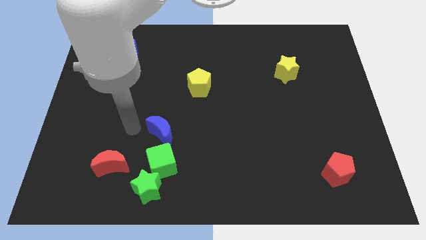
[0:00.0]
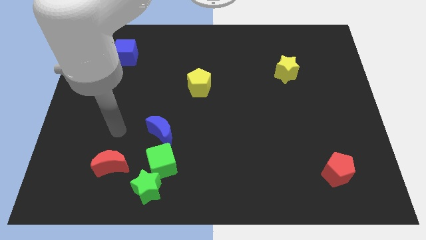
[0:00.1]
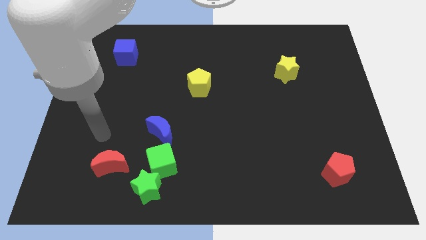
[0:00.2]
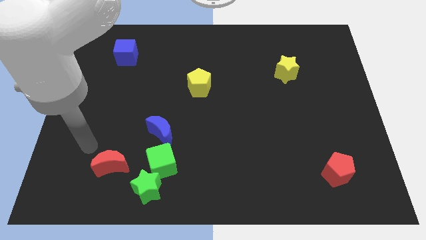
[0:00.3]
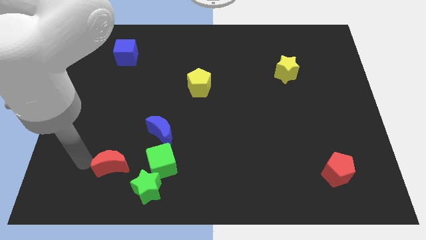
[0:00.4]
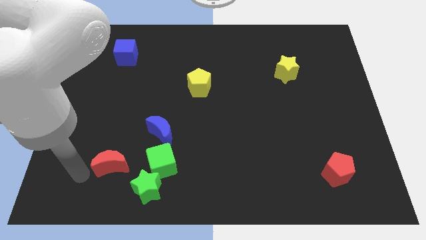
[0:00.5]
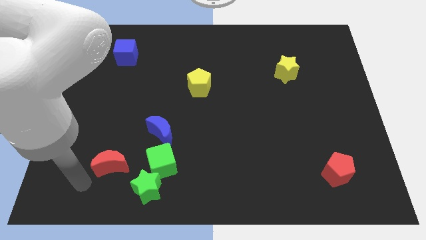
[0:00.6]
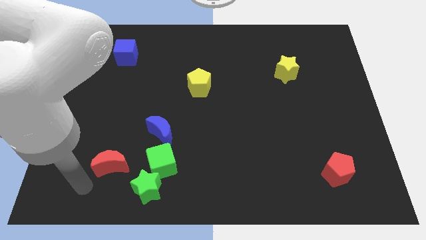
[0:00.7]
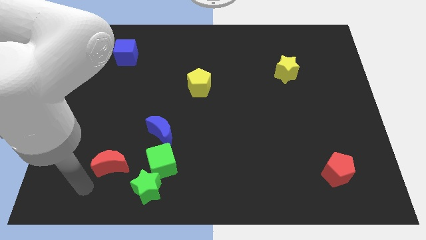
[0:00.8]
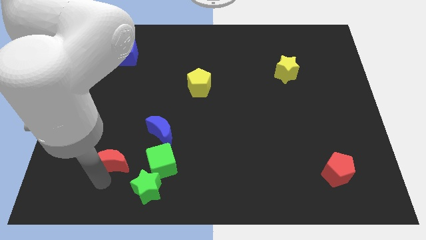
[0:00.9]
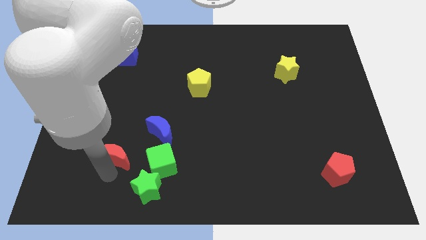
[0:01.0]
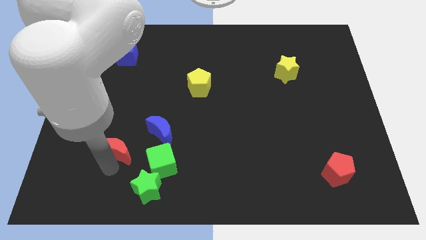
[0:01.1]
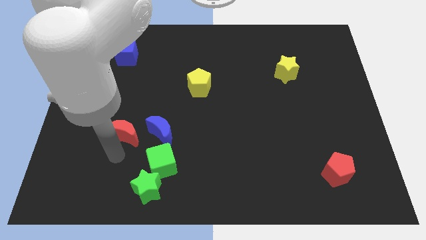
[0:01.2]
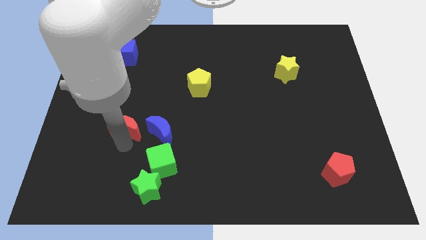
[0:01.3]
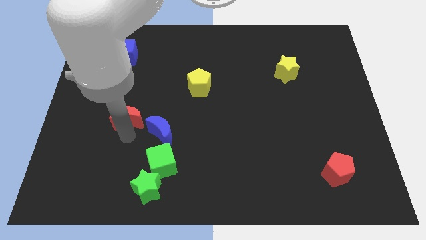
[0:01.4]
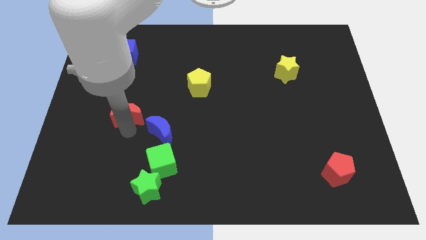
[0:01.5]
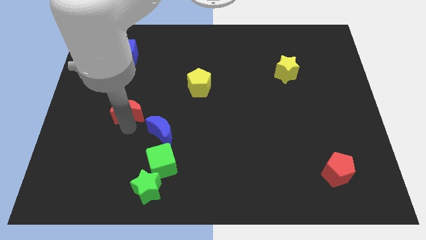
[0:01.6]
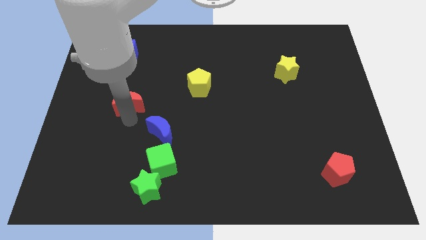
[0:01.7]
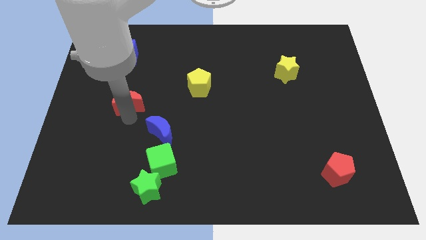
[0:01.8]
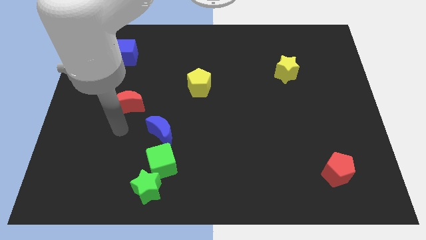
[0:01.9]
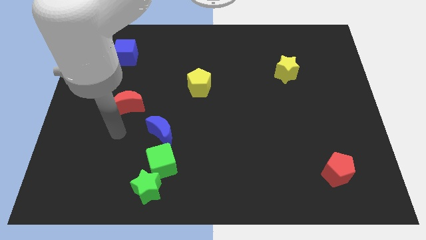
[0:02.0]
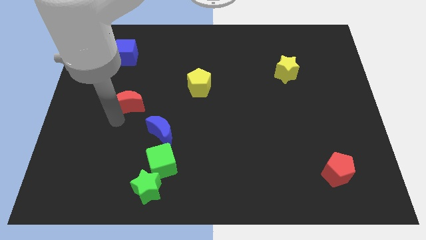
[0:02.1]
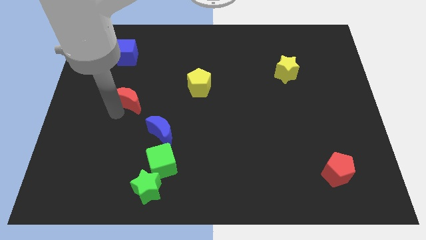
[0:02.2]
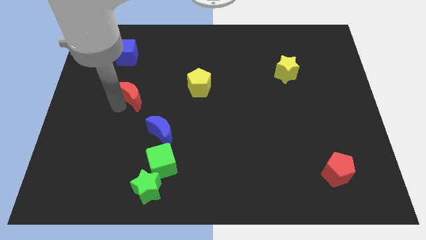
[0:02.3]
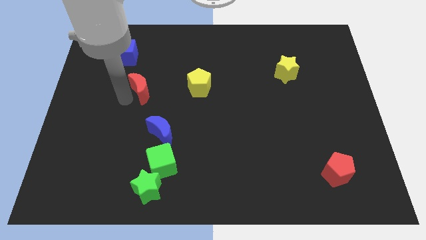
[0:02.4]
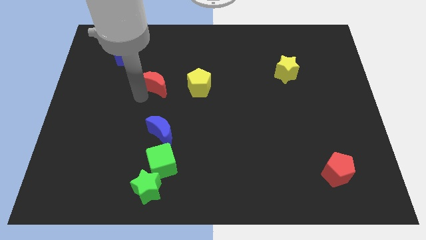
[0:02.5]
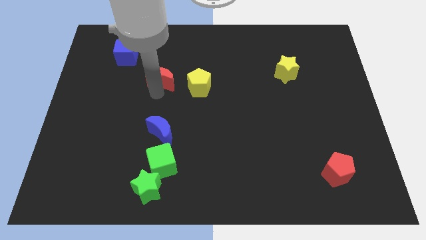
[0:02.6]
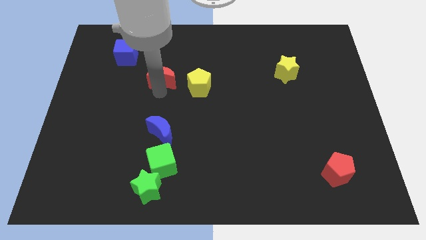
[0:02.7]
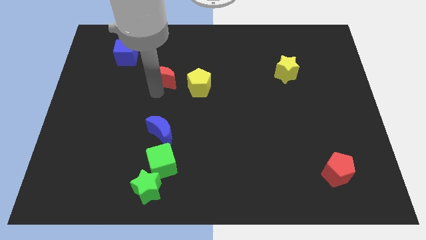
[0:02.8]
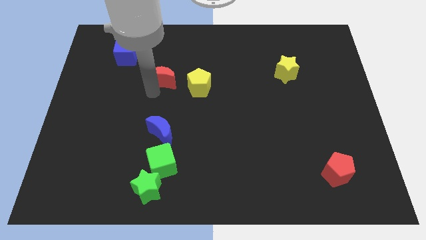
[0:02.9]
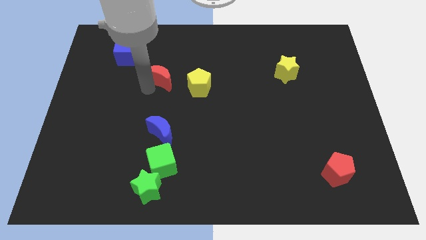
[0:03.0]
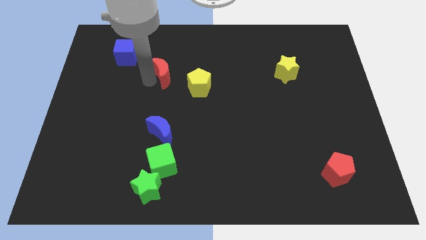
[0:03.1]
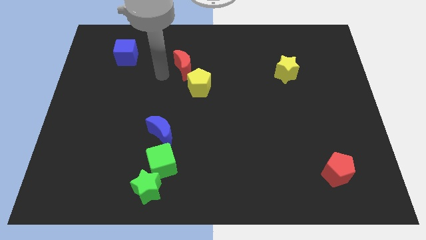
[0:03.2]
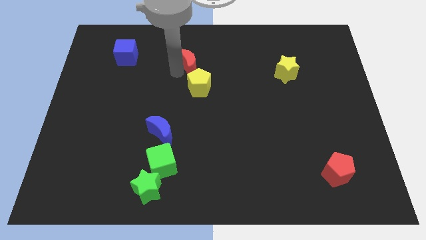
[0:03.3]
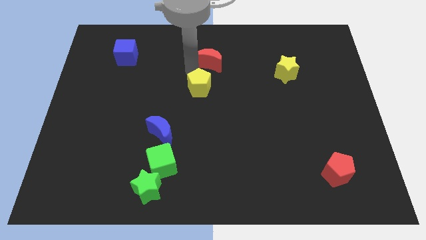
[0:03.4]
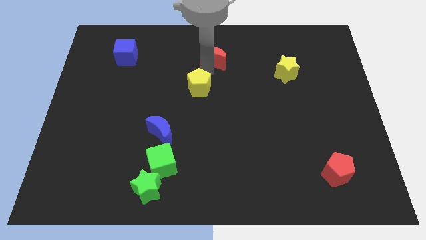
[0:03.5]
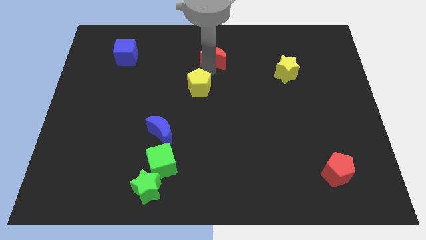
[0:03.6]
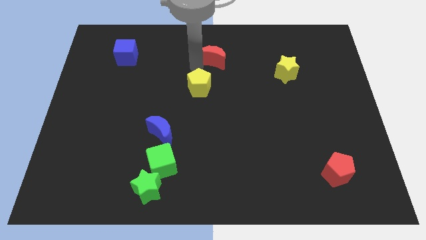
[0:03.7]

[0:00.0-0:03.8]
drag the red crescent to the top side of the yellow pentagon

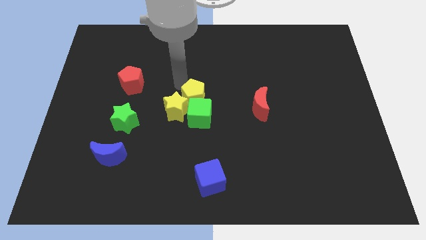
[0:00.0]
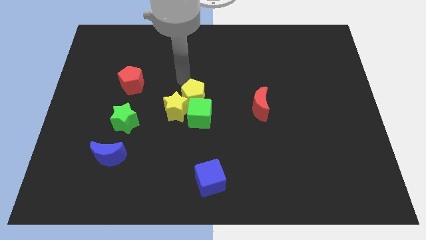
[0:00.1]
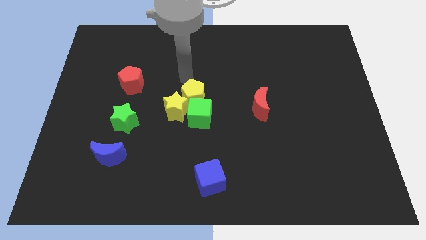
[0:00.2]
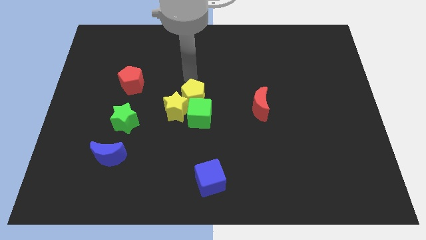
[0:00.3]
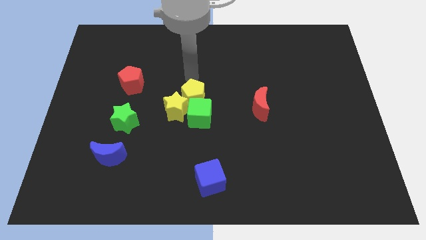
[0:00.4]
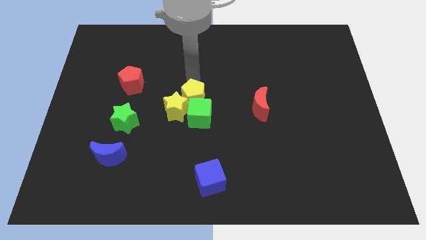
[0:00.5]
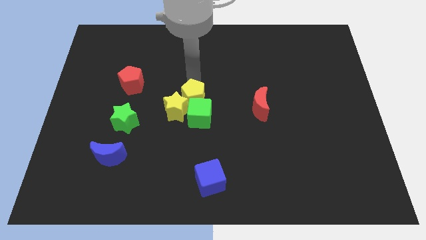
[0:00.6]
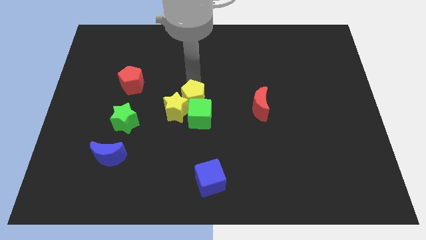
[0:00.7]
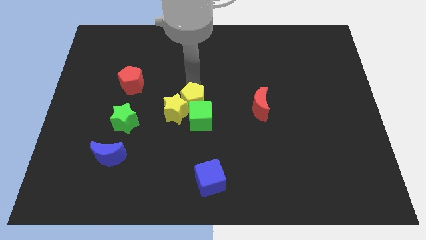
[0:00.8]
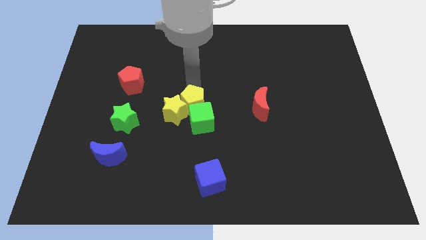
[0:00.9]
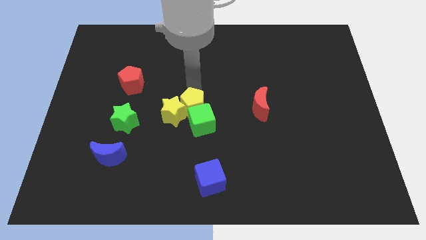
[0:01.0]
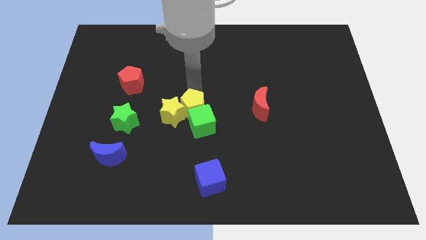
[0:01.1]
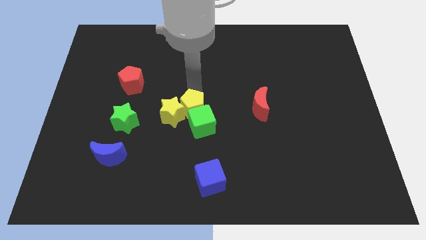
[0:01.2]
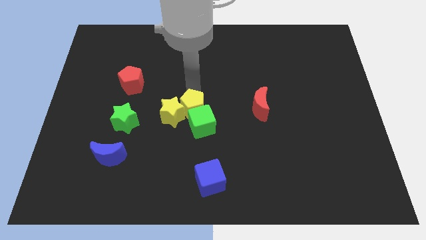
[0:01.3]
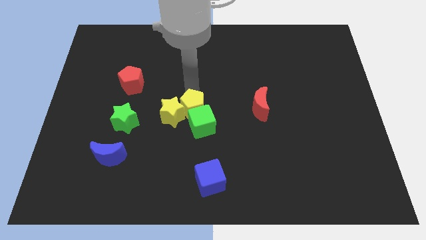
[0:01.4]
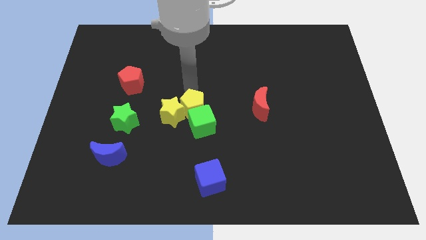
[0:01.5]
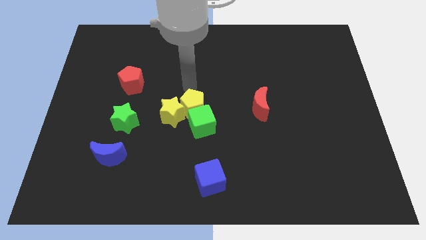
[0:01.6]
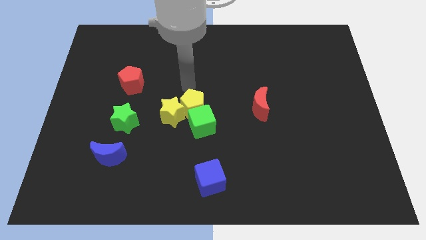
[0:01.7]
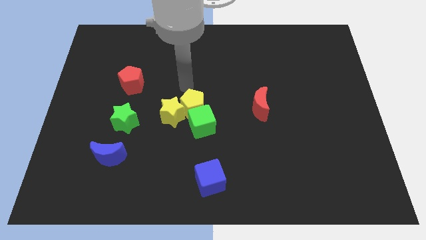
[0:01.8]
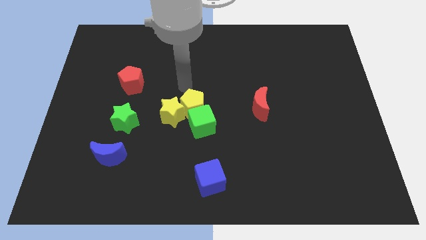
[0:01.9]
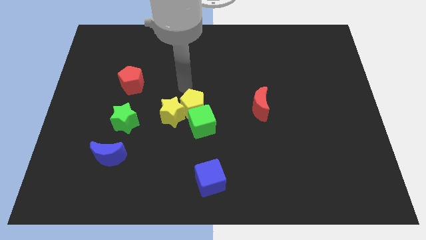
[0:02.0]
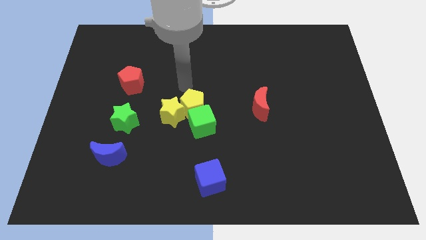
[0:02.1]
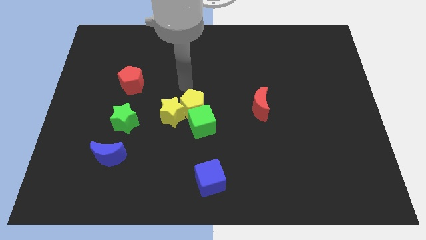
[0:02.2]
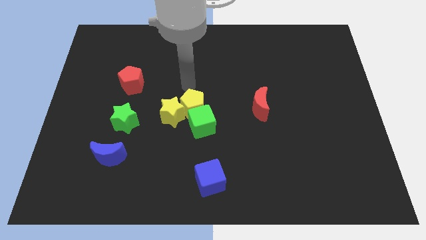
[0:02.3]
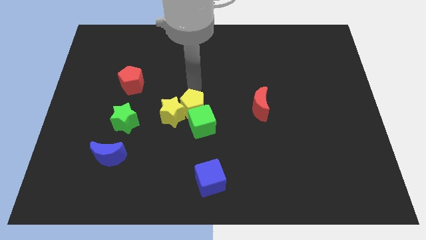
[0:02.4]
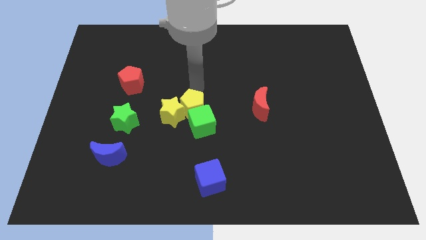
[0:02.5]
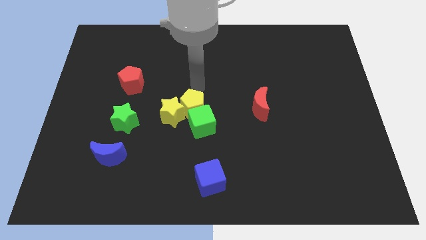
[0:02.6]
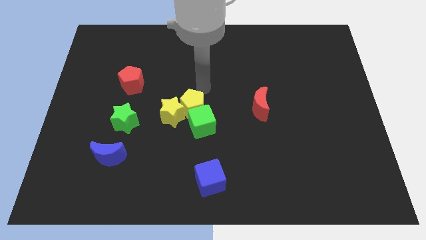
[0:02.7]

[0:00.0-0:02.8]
push the yellow pentagon into green cube

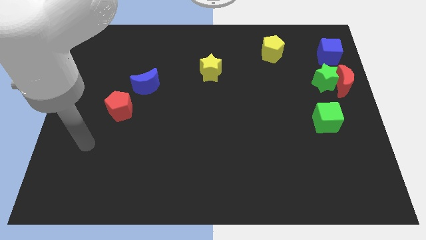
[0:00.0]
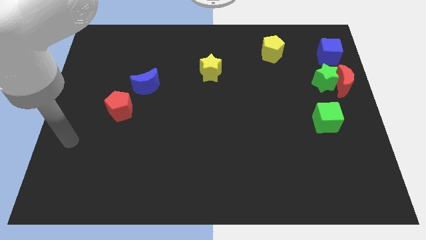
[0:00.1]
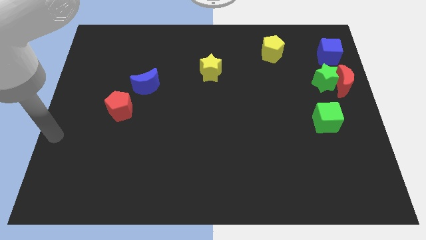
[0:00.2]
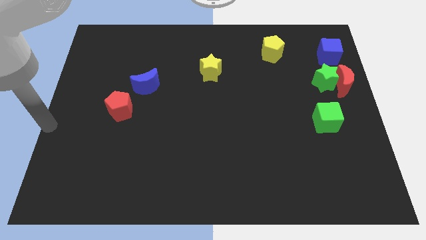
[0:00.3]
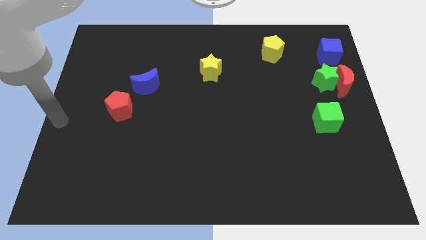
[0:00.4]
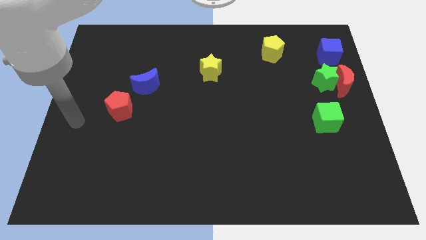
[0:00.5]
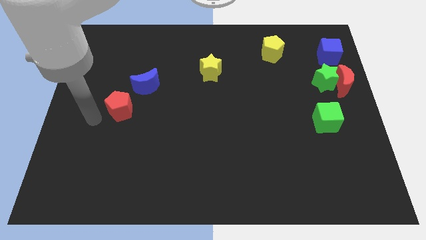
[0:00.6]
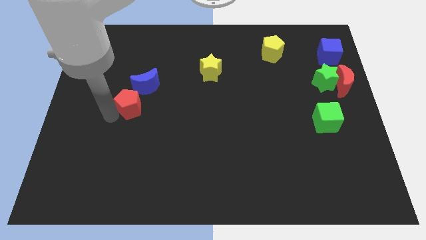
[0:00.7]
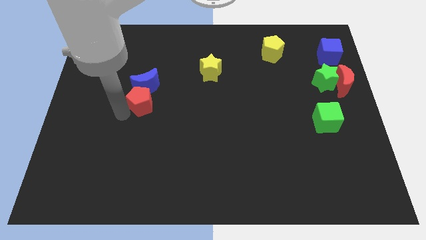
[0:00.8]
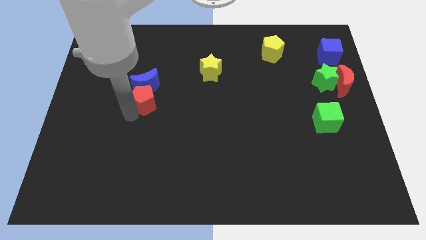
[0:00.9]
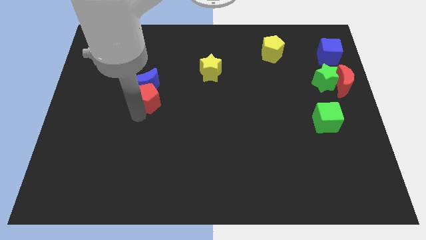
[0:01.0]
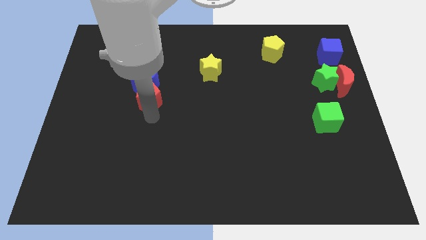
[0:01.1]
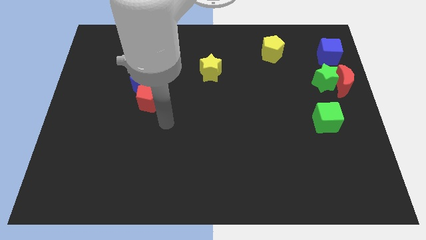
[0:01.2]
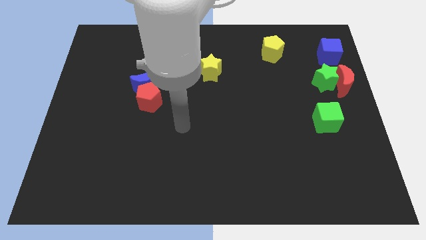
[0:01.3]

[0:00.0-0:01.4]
push the red pentagon below the blue moon

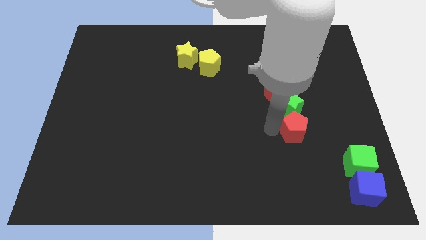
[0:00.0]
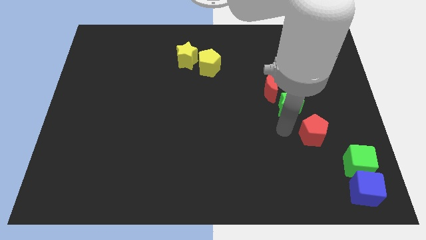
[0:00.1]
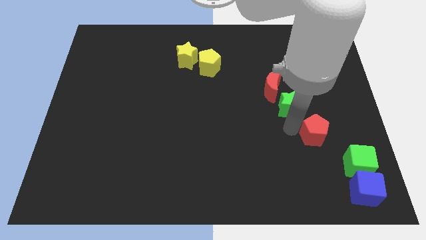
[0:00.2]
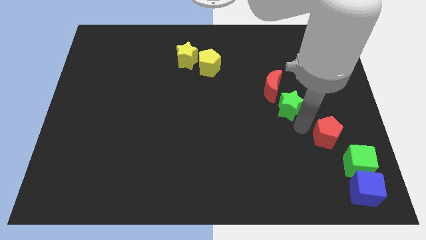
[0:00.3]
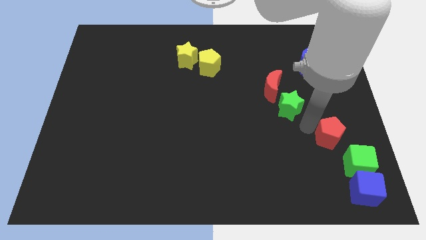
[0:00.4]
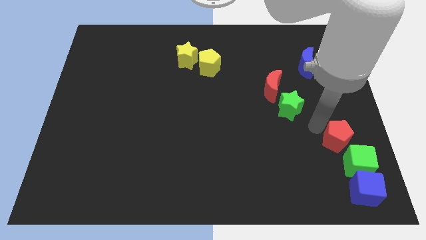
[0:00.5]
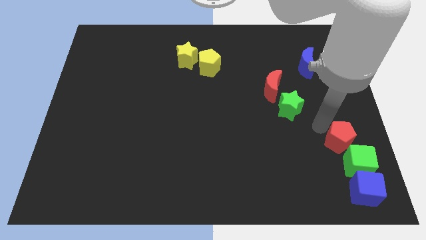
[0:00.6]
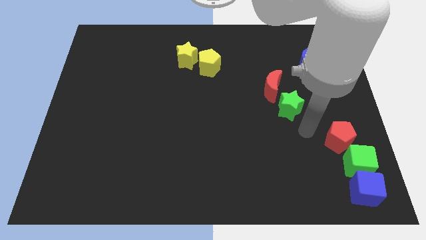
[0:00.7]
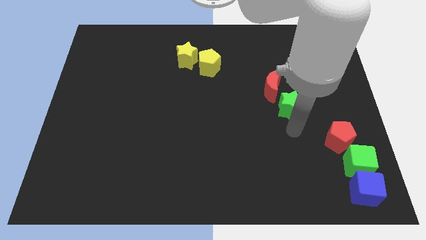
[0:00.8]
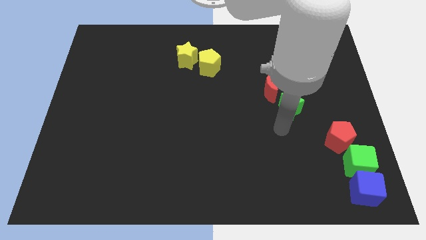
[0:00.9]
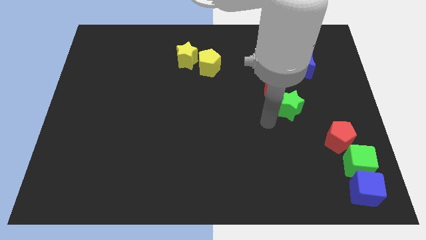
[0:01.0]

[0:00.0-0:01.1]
place the red pentagon to the left top of the green cube
